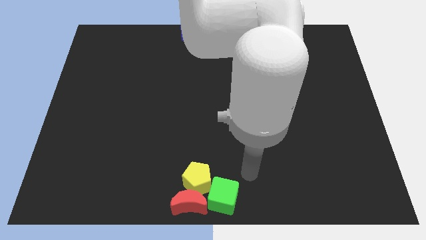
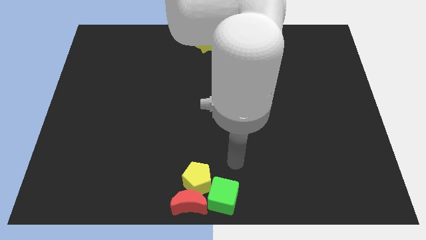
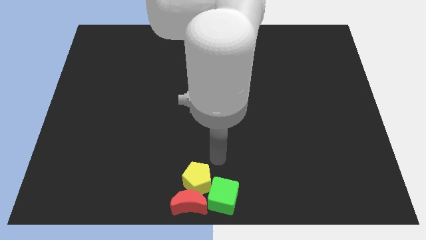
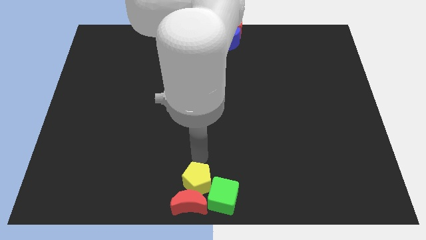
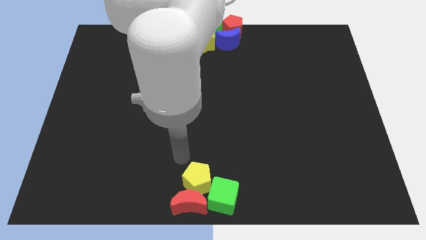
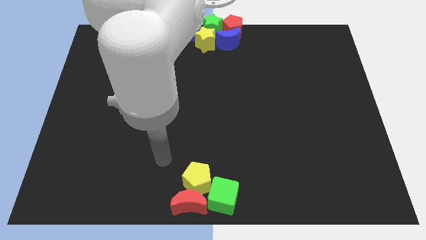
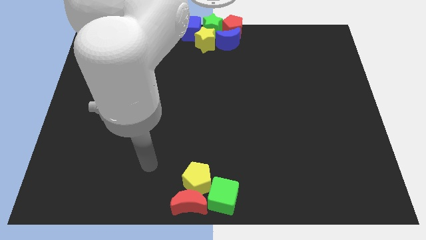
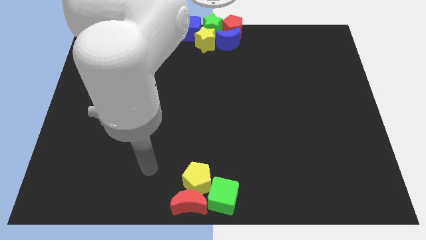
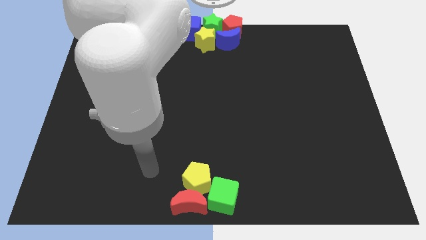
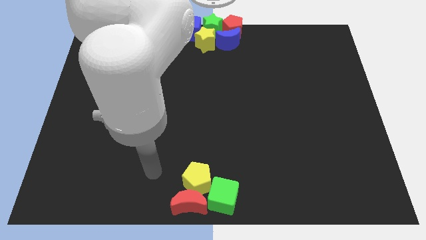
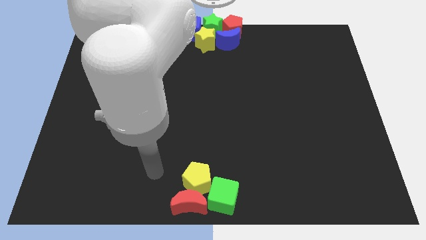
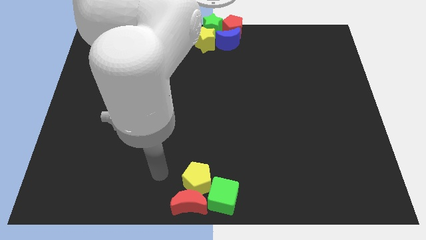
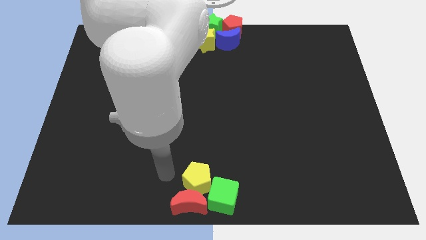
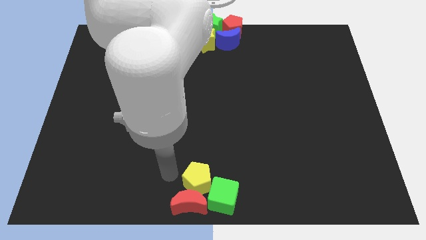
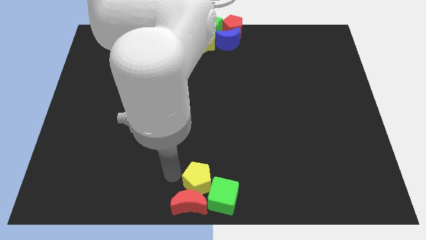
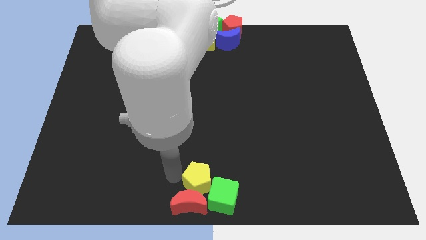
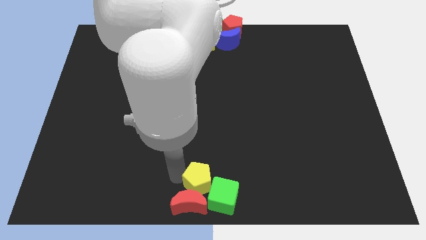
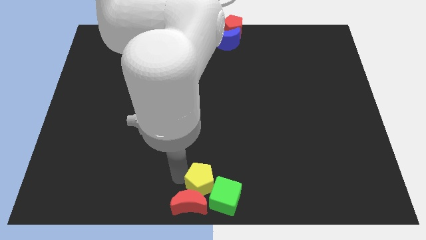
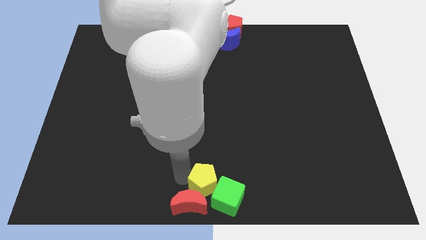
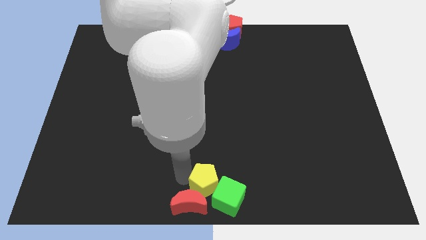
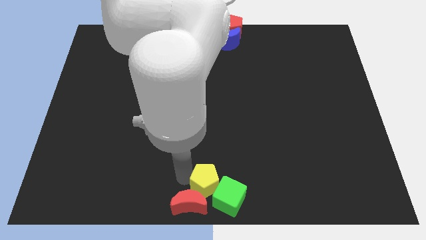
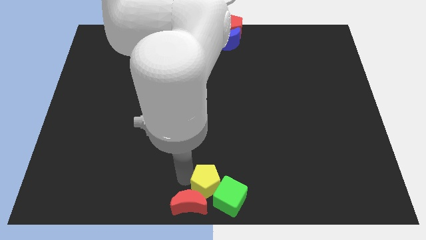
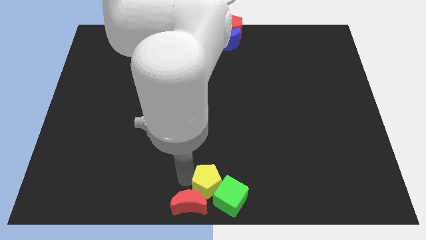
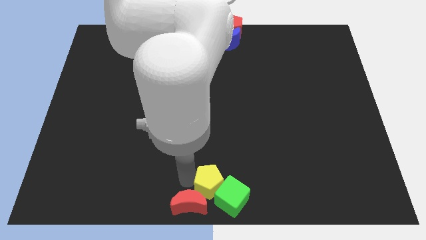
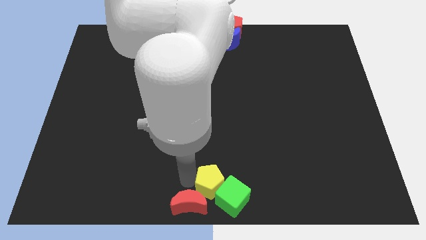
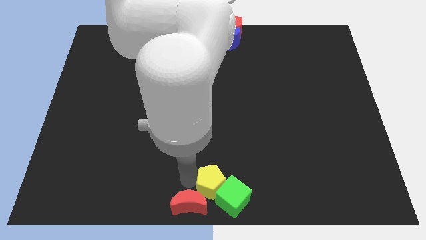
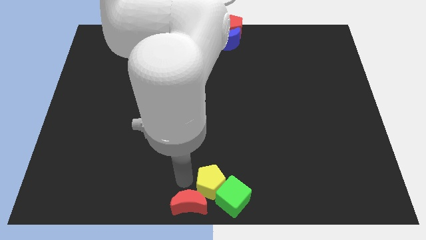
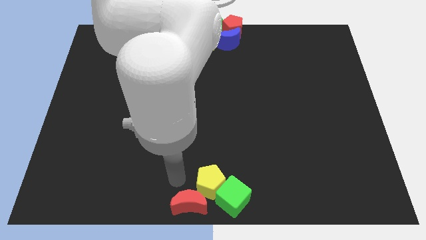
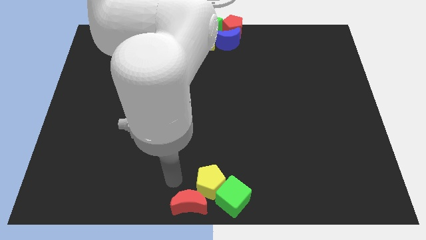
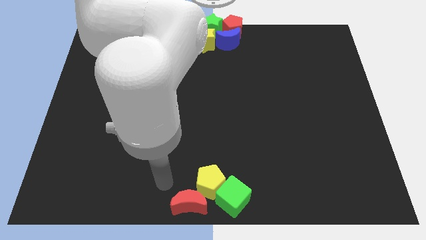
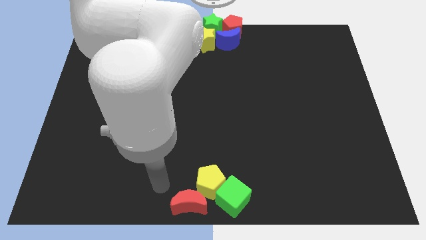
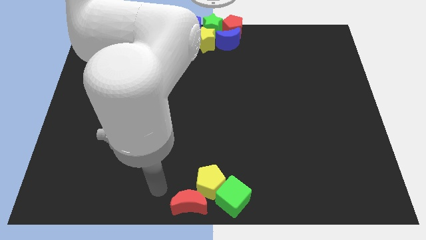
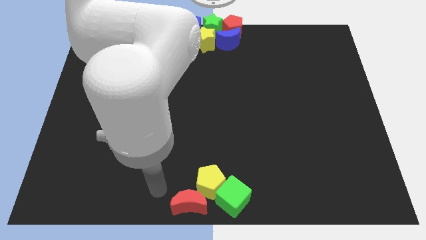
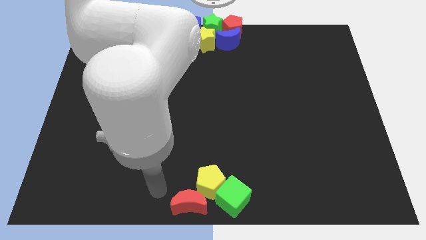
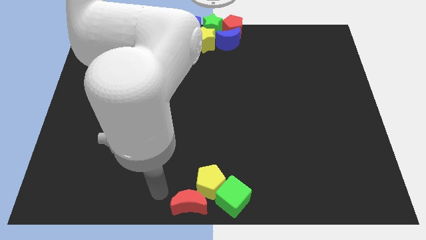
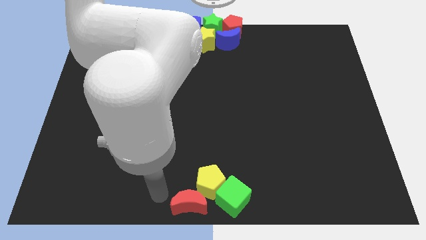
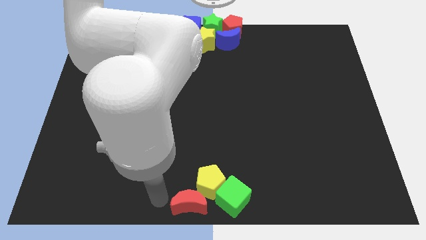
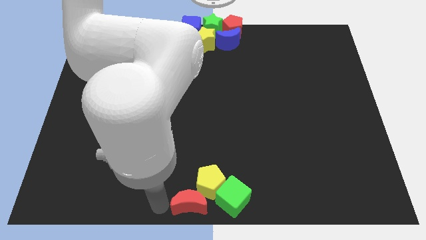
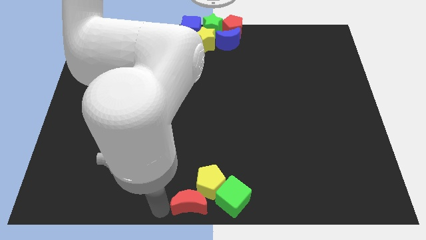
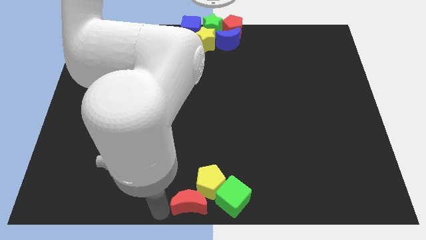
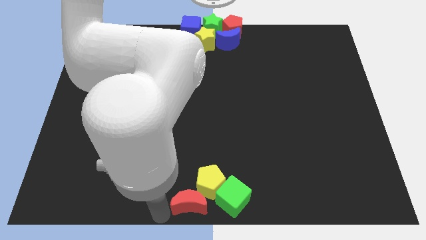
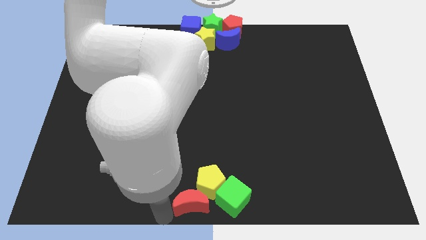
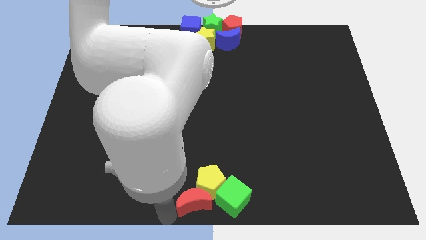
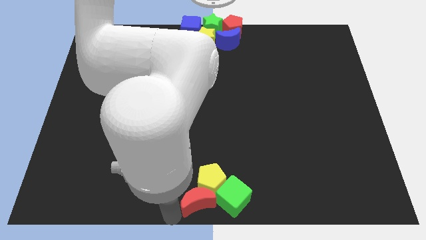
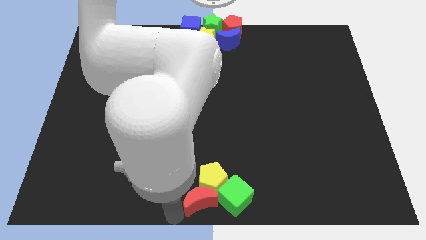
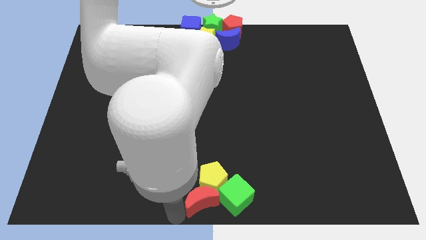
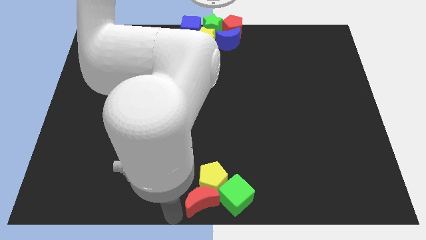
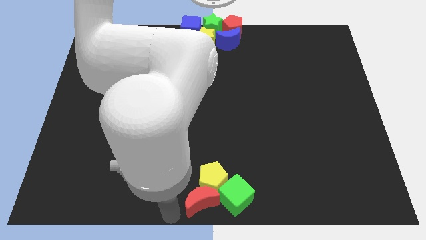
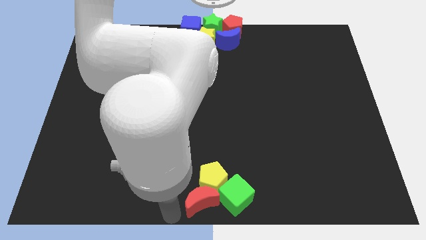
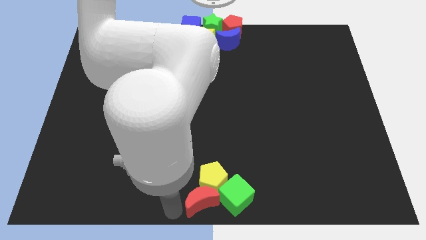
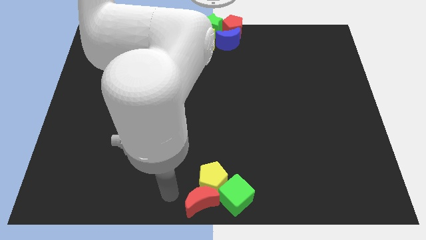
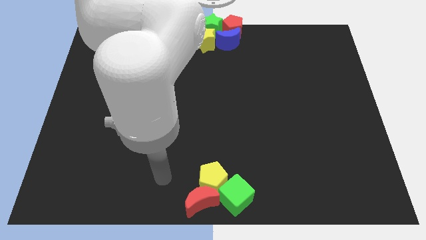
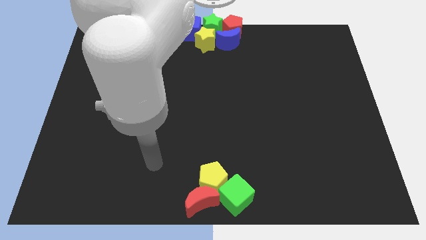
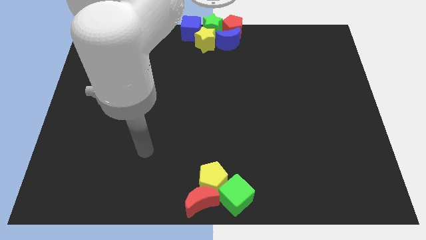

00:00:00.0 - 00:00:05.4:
push yellow pentagon red crescent and green cube to form a triangle

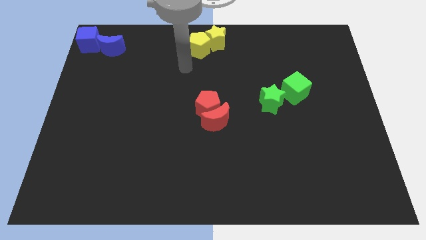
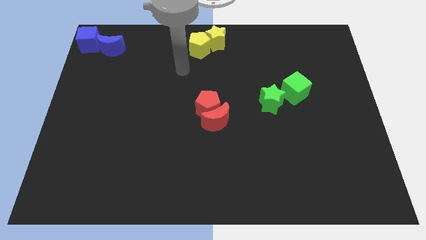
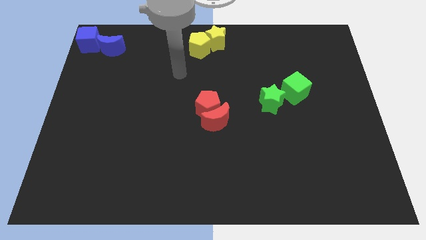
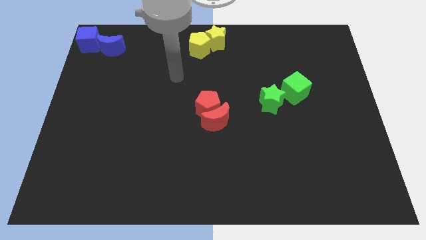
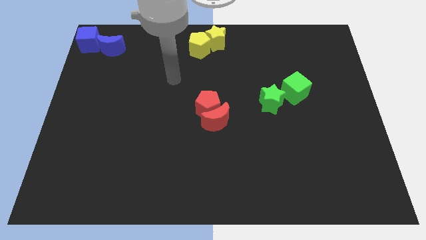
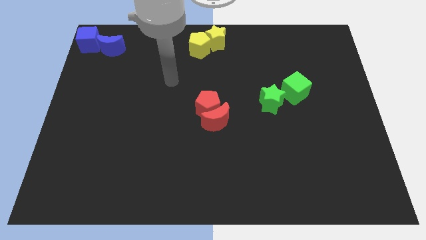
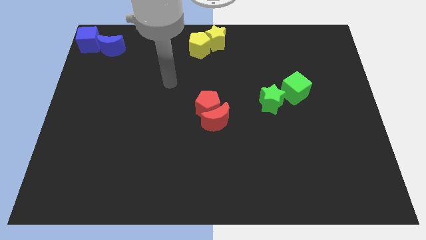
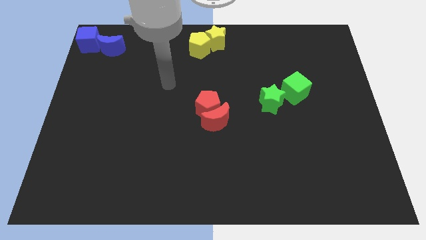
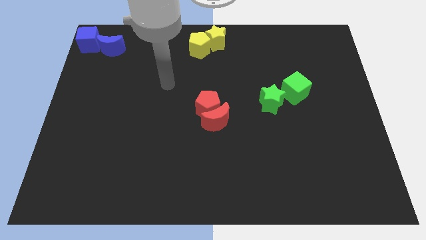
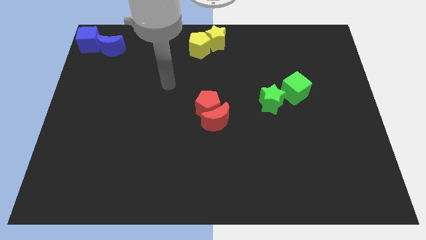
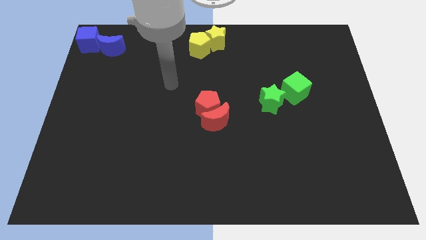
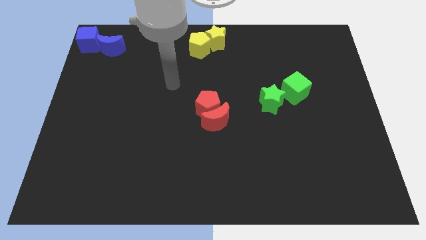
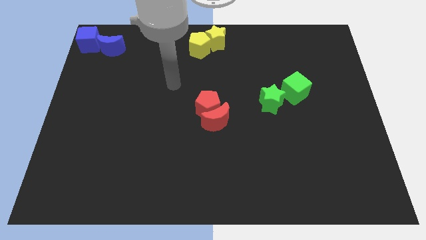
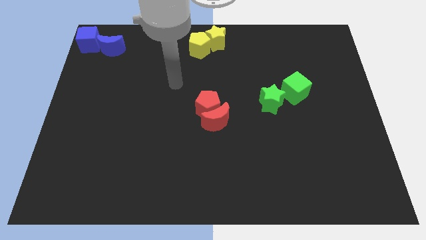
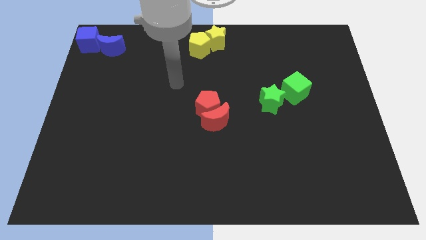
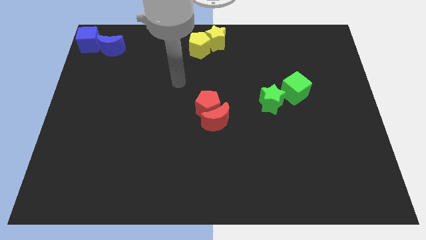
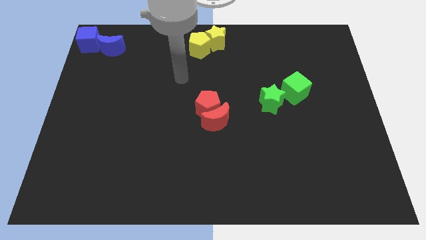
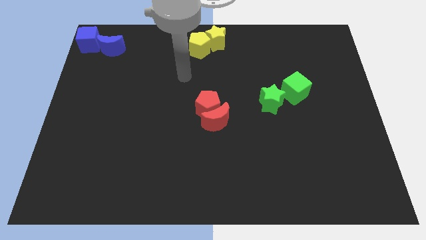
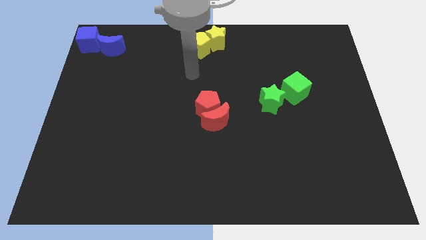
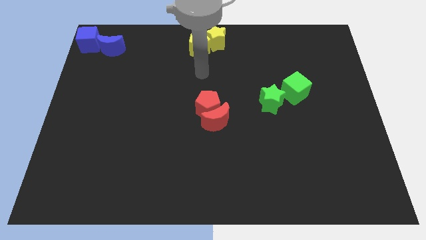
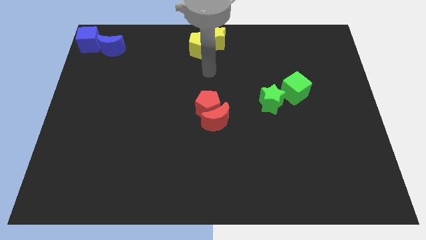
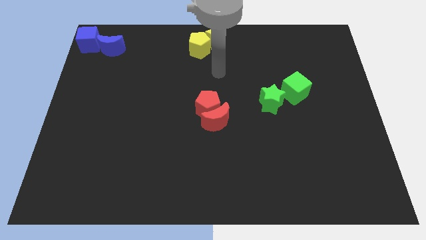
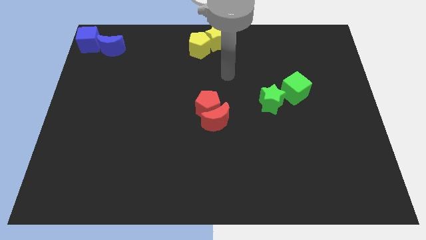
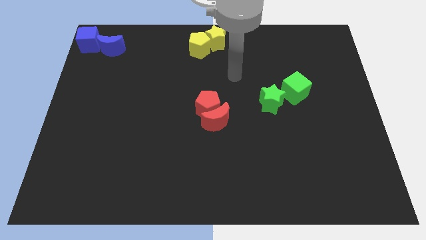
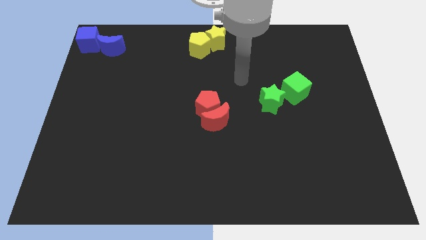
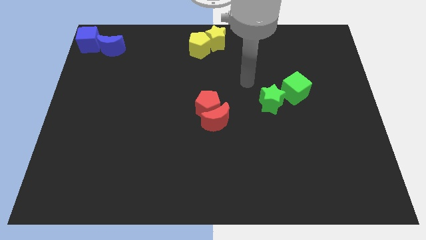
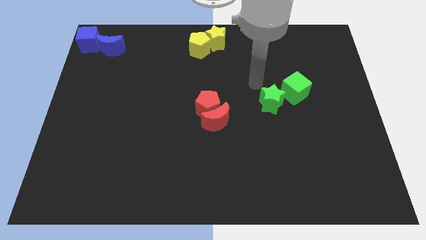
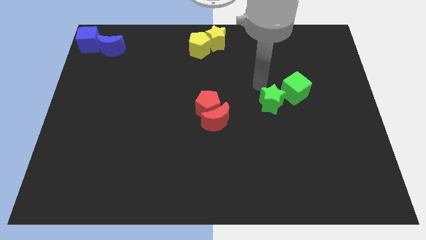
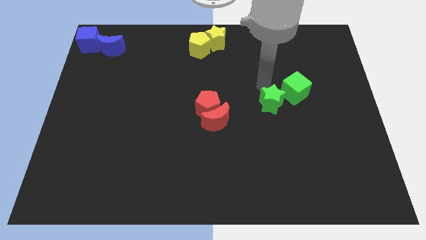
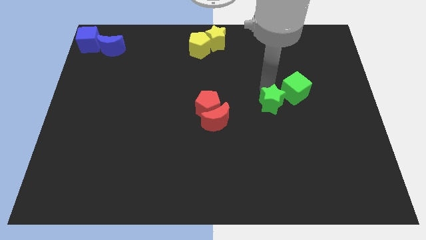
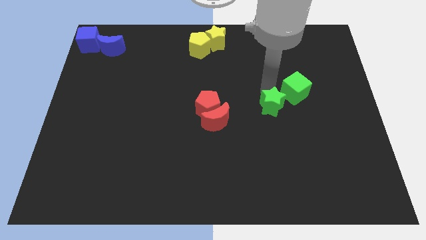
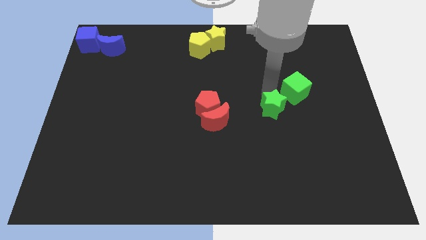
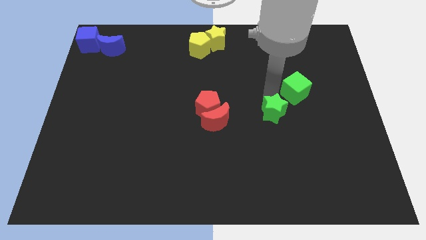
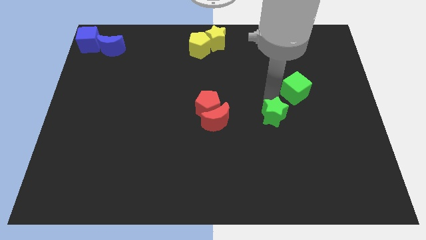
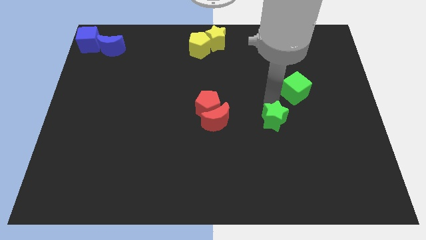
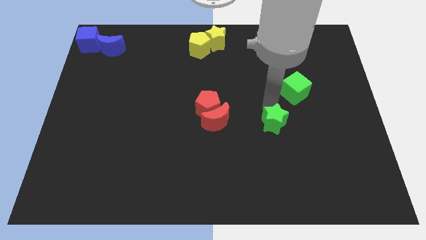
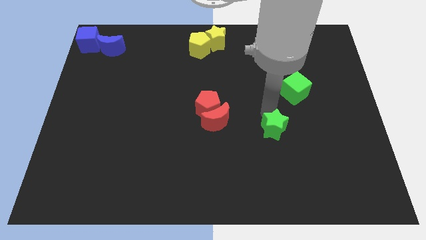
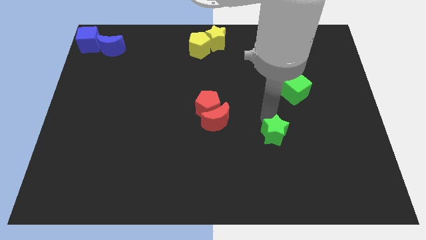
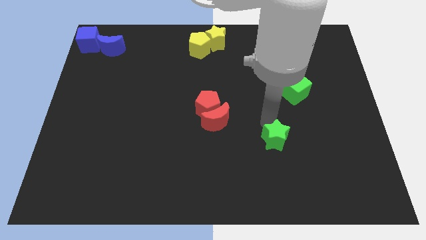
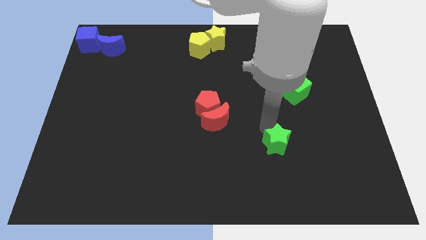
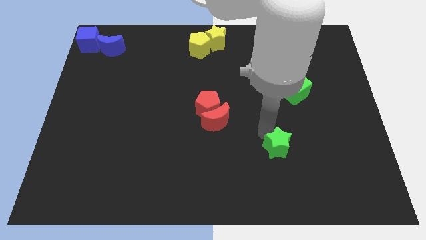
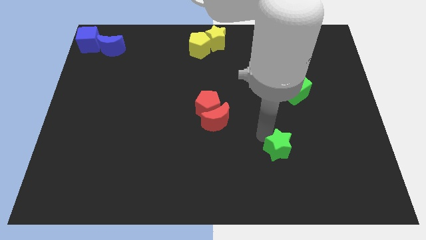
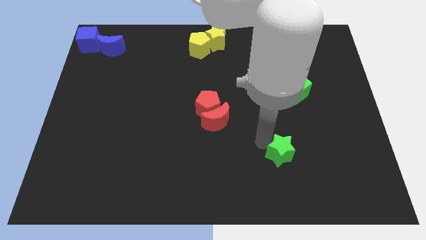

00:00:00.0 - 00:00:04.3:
separate the green star from the green cube
